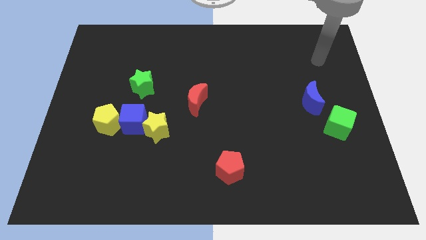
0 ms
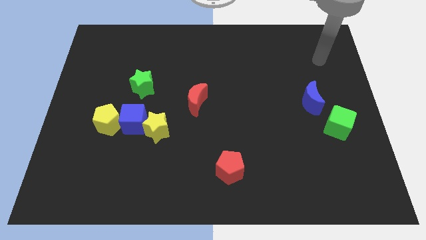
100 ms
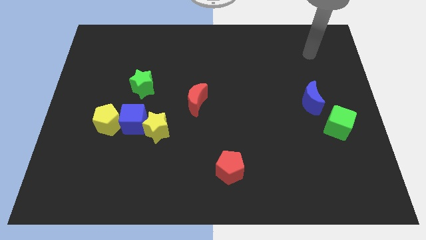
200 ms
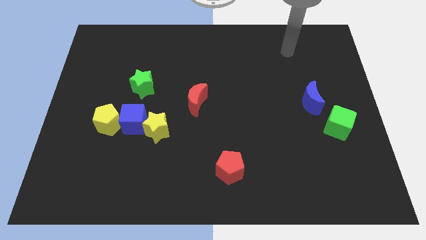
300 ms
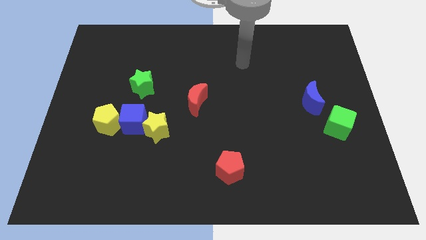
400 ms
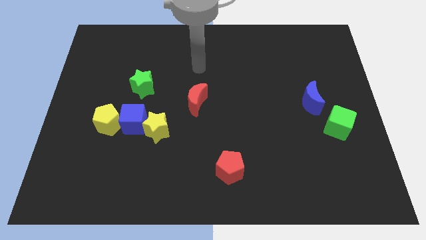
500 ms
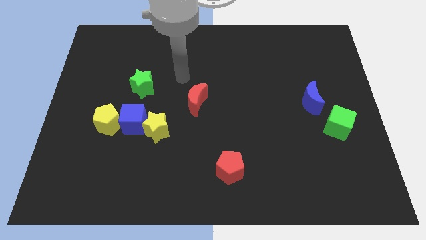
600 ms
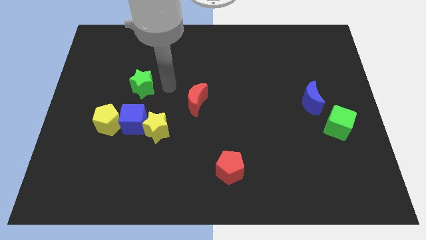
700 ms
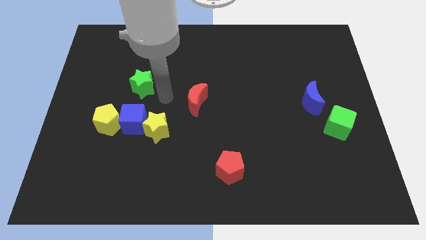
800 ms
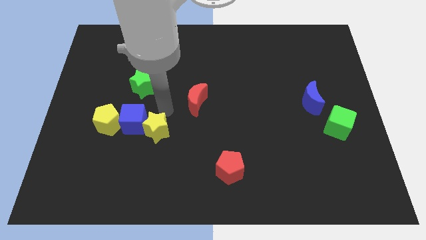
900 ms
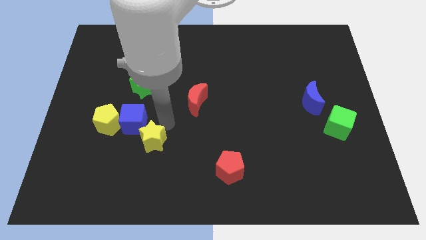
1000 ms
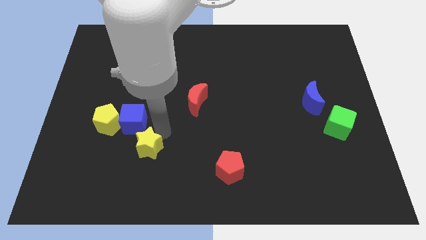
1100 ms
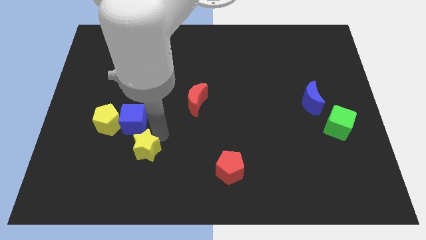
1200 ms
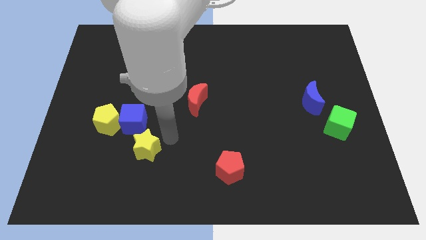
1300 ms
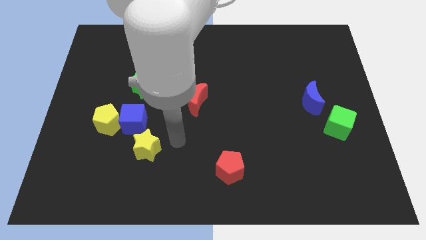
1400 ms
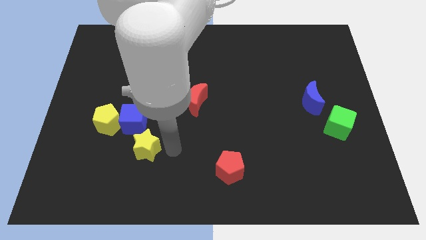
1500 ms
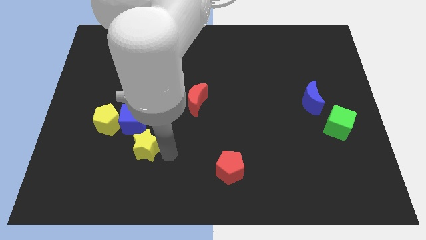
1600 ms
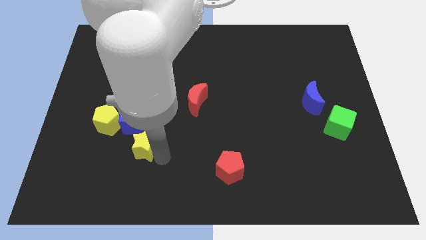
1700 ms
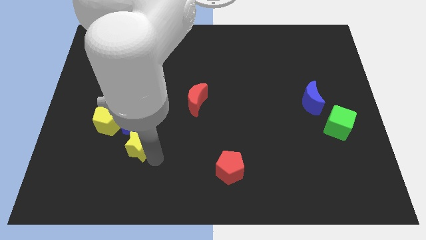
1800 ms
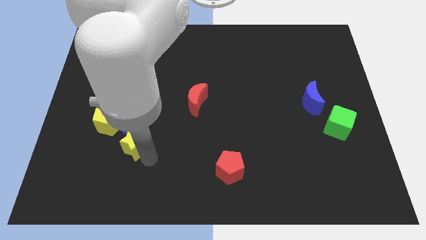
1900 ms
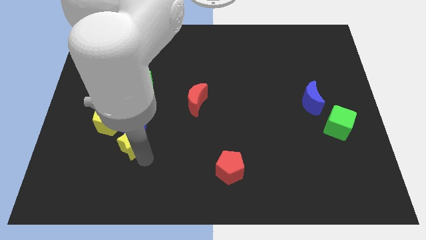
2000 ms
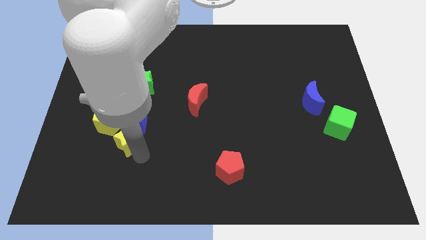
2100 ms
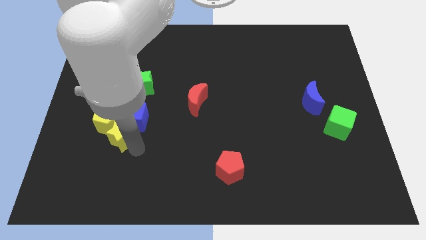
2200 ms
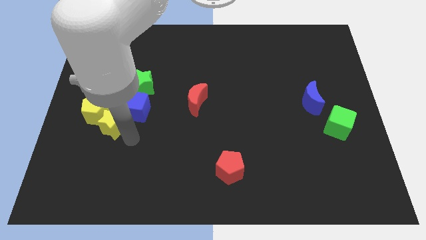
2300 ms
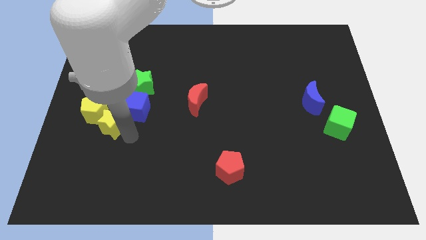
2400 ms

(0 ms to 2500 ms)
slide the yellow star next to the yellow pentagon

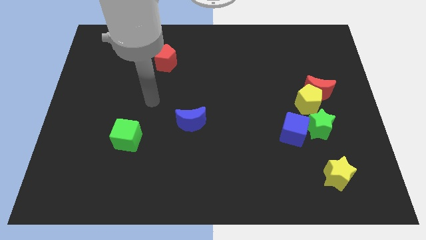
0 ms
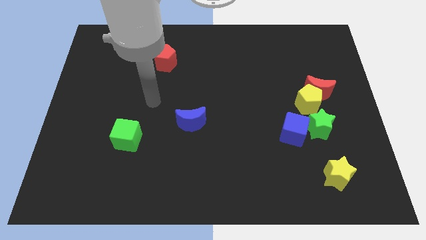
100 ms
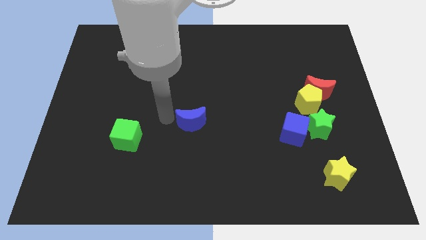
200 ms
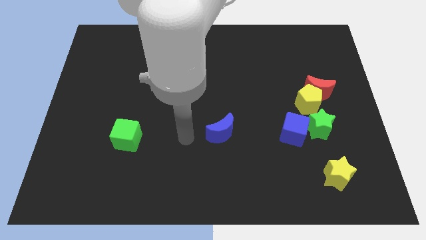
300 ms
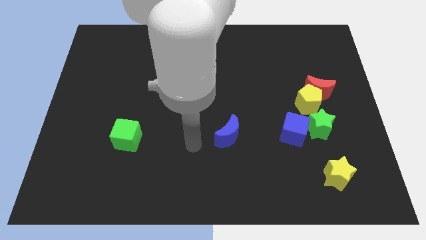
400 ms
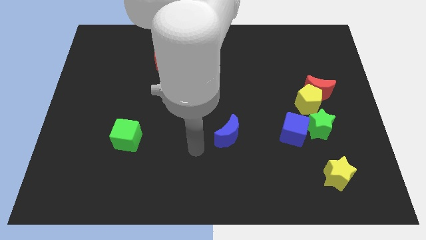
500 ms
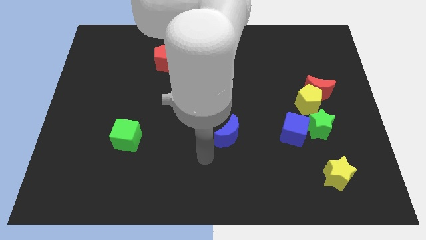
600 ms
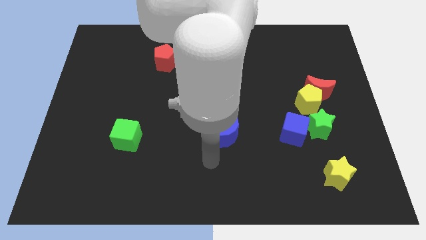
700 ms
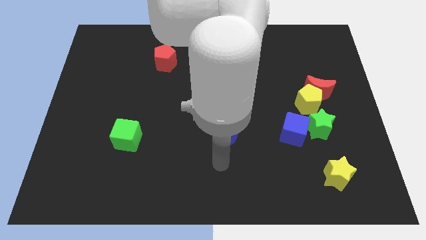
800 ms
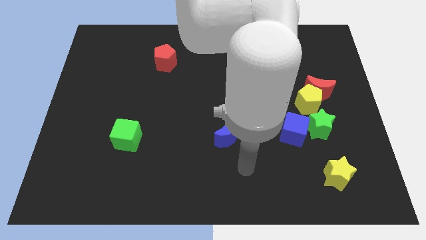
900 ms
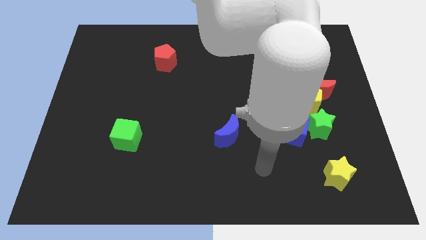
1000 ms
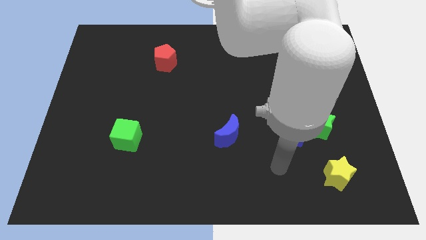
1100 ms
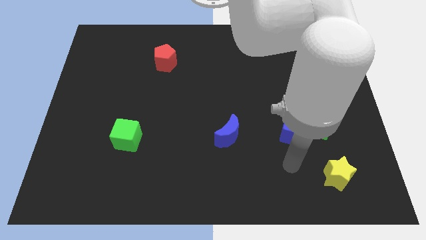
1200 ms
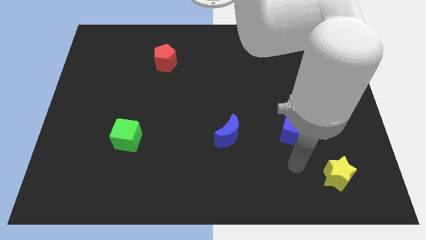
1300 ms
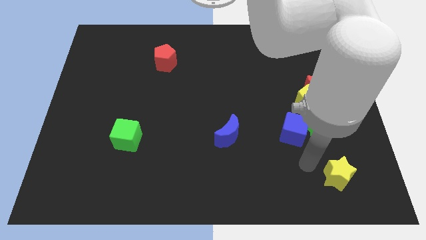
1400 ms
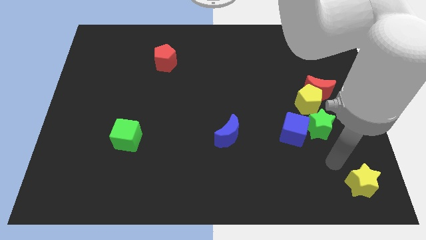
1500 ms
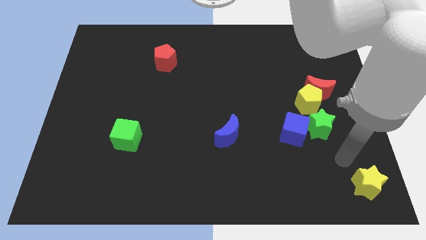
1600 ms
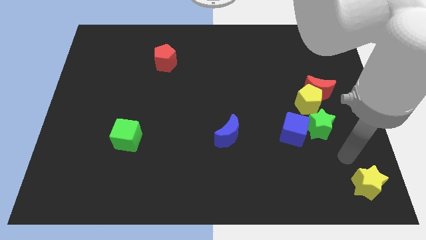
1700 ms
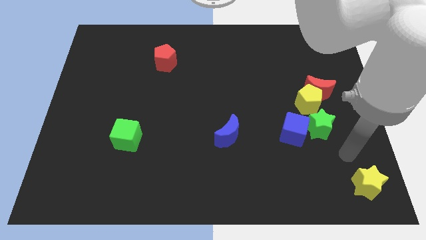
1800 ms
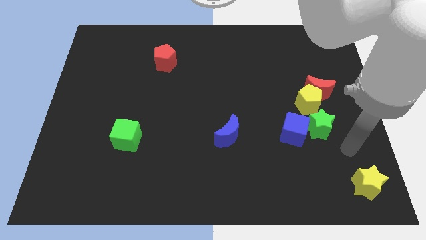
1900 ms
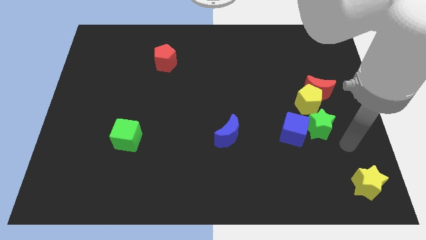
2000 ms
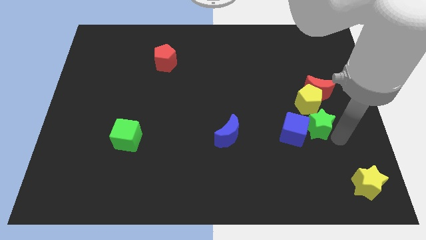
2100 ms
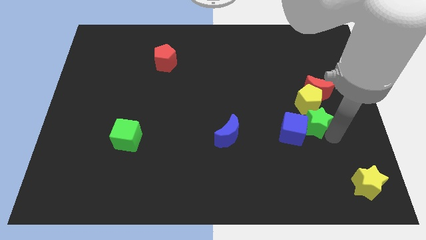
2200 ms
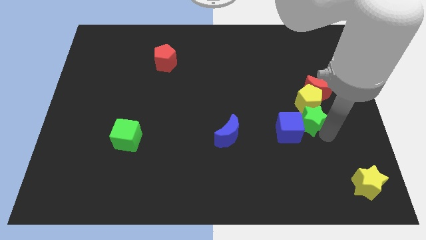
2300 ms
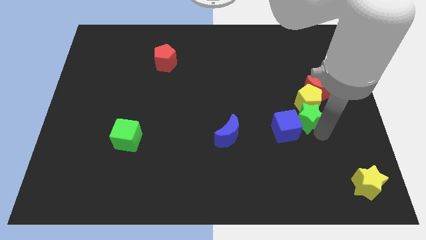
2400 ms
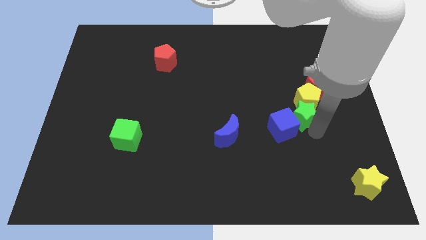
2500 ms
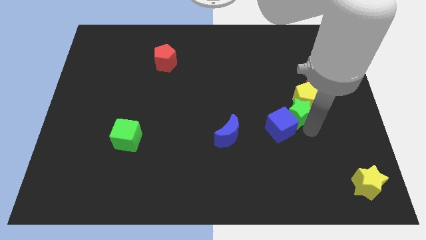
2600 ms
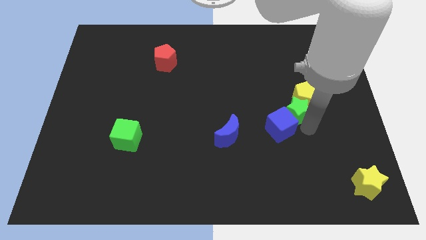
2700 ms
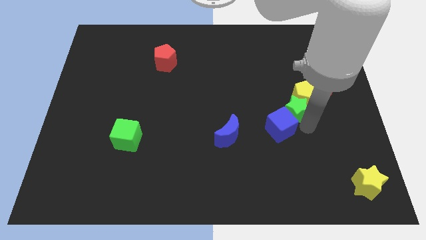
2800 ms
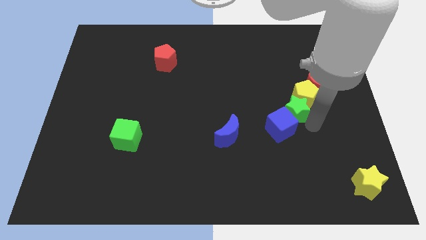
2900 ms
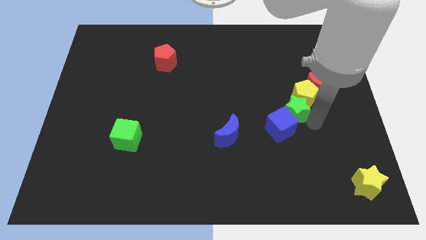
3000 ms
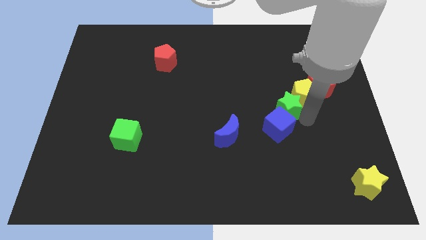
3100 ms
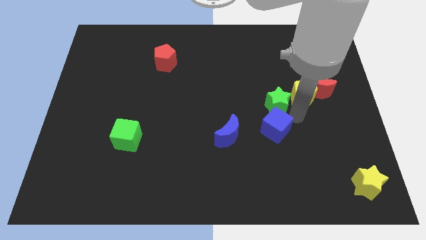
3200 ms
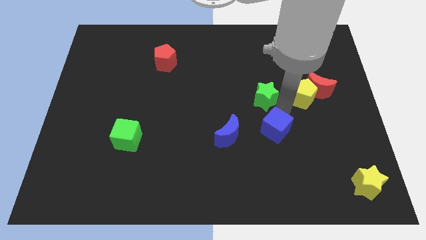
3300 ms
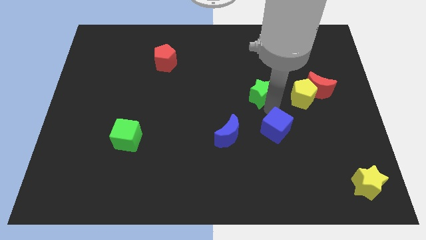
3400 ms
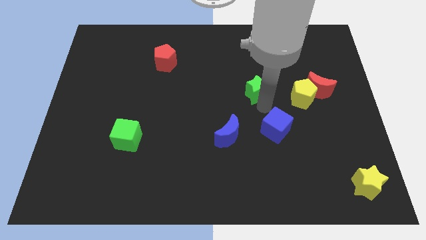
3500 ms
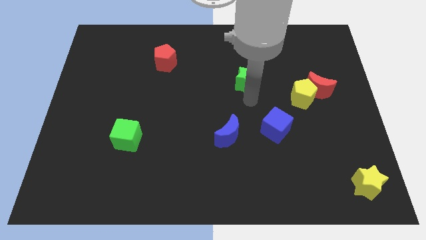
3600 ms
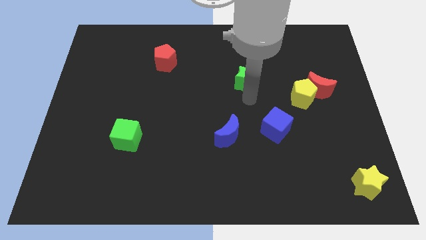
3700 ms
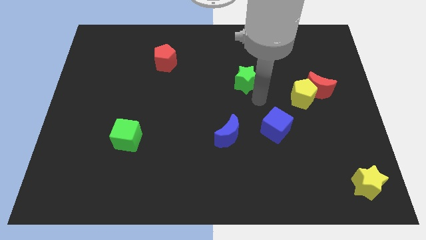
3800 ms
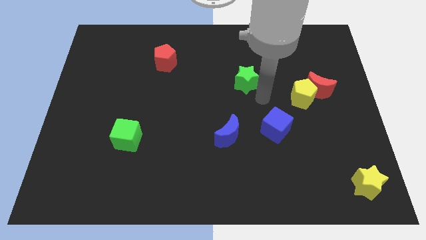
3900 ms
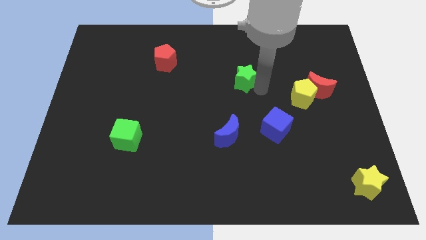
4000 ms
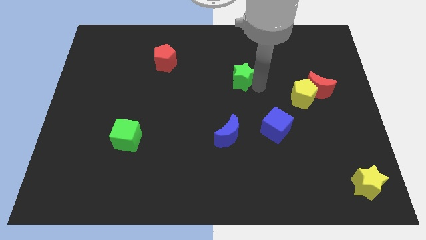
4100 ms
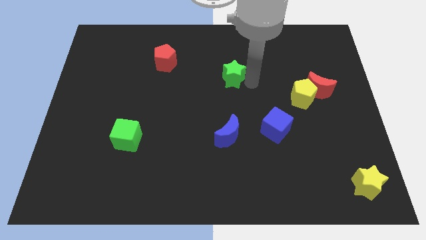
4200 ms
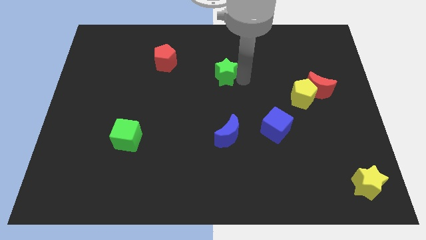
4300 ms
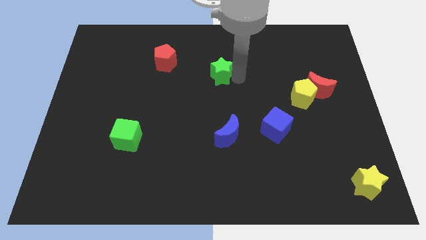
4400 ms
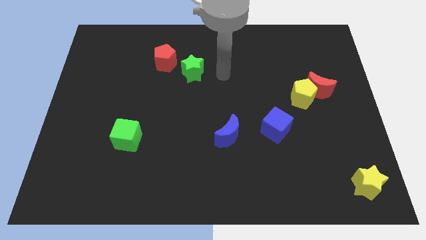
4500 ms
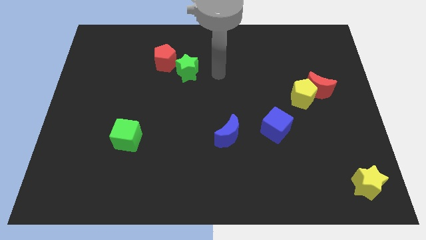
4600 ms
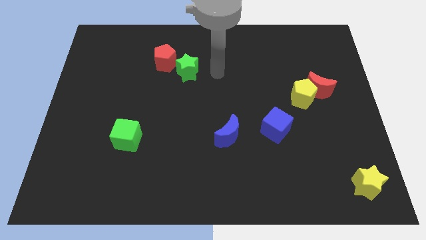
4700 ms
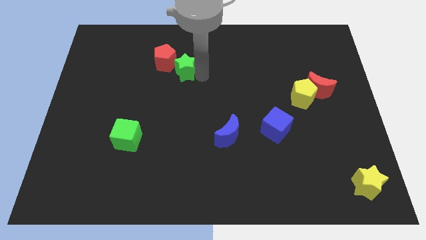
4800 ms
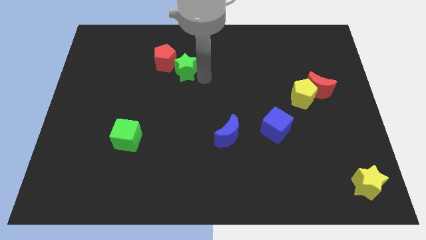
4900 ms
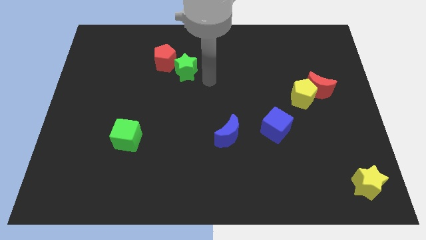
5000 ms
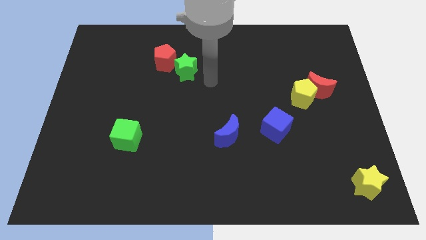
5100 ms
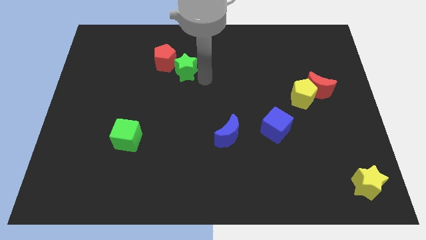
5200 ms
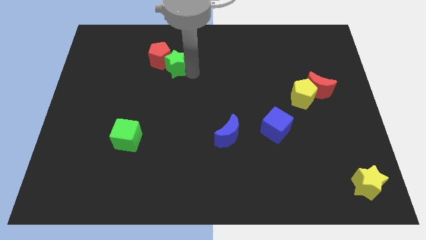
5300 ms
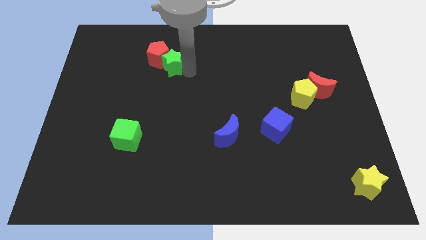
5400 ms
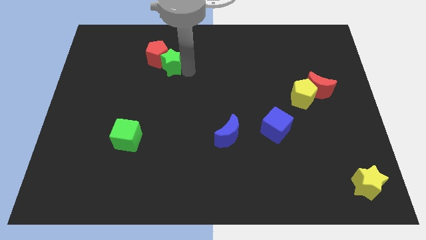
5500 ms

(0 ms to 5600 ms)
put the green star towards the red pentagon
